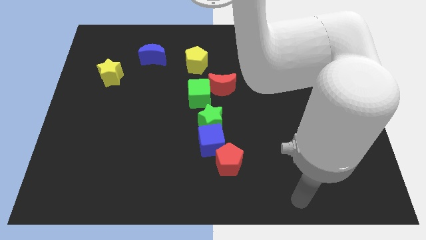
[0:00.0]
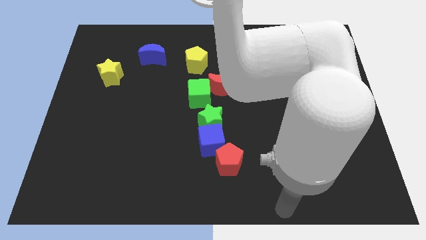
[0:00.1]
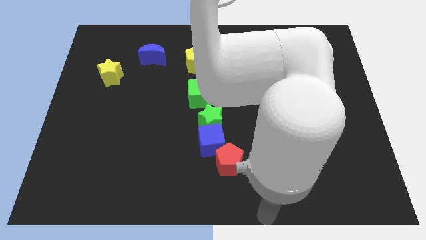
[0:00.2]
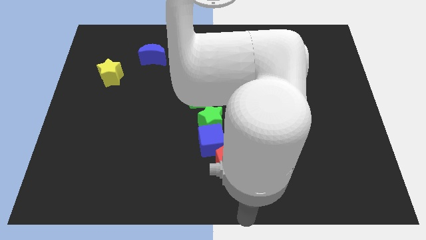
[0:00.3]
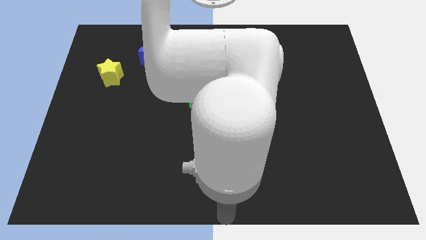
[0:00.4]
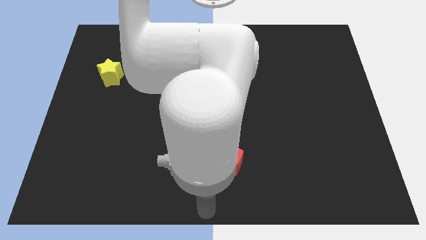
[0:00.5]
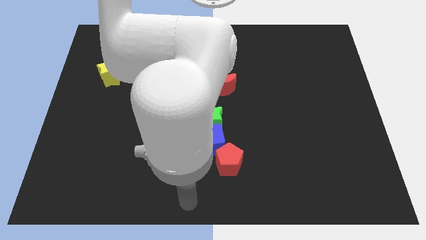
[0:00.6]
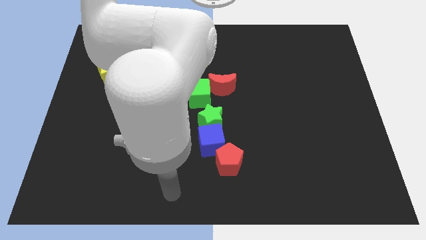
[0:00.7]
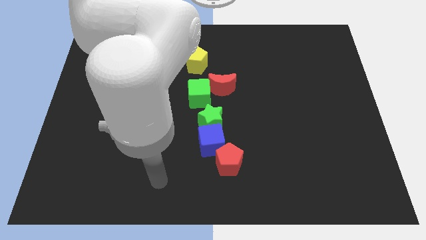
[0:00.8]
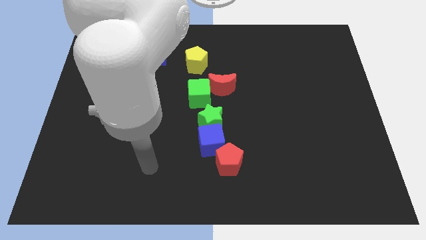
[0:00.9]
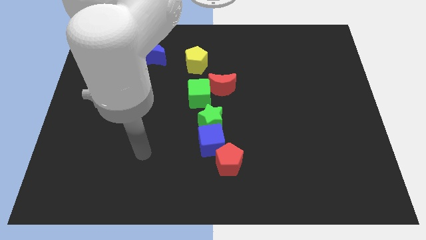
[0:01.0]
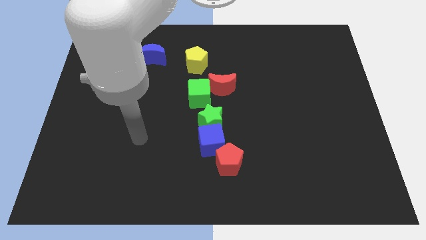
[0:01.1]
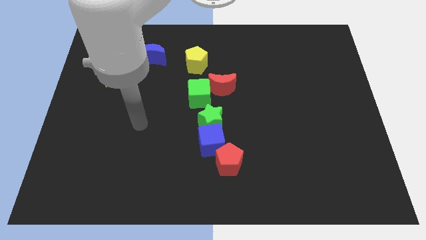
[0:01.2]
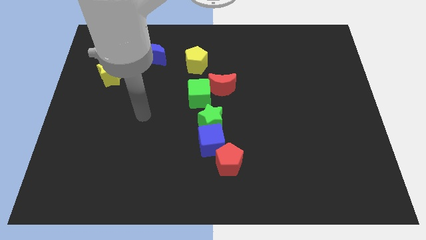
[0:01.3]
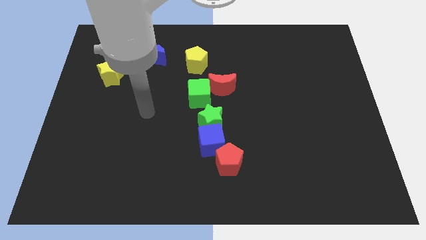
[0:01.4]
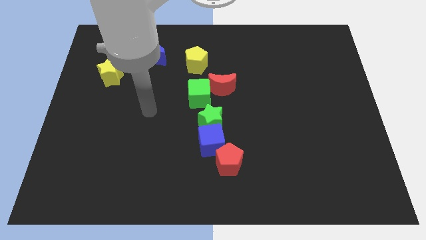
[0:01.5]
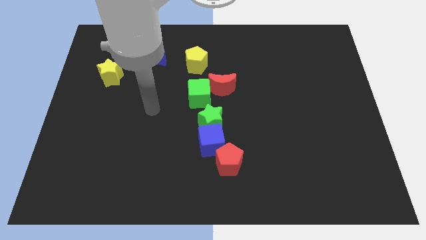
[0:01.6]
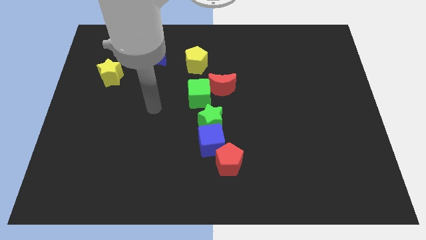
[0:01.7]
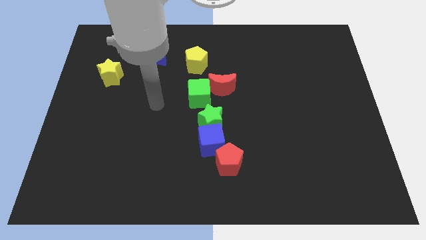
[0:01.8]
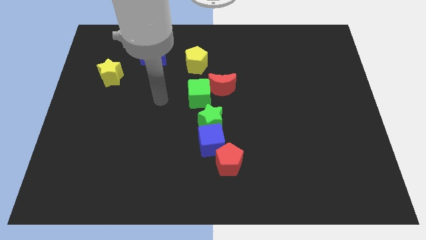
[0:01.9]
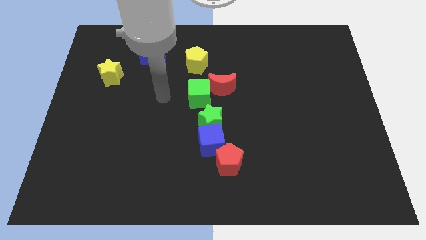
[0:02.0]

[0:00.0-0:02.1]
move arm left beside the green cube

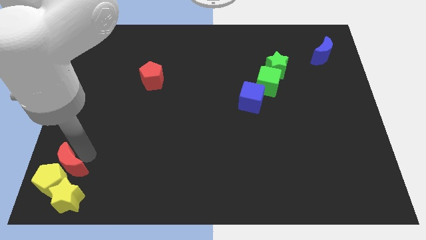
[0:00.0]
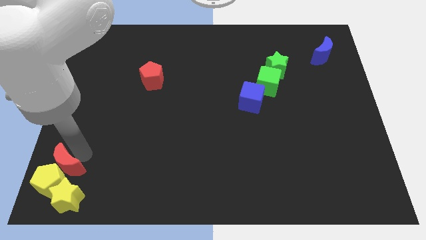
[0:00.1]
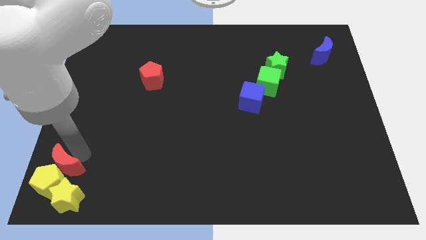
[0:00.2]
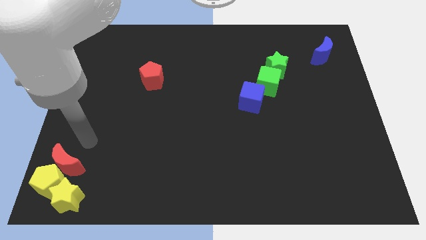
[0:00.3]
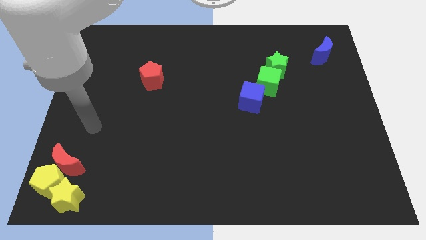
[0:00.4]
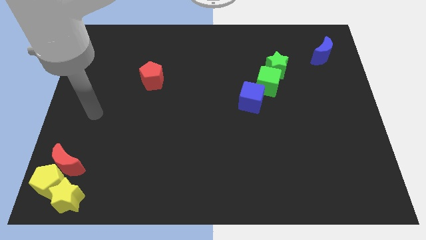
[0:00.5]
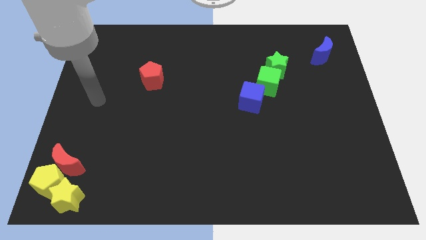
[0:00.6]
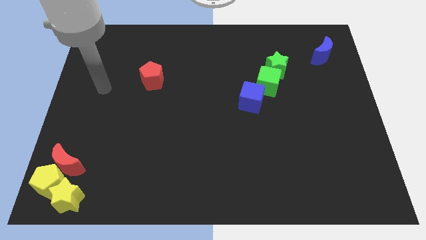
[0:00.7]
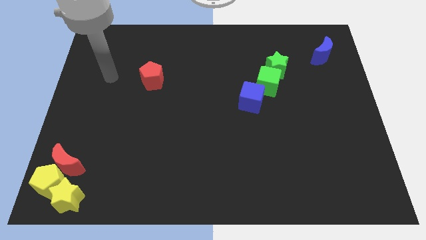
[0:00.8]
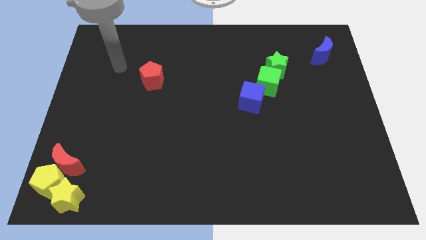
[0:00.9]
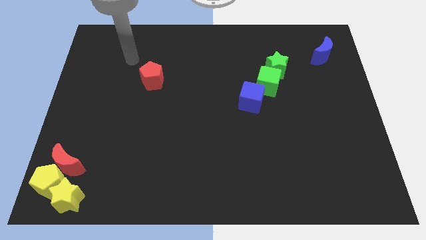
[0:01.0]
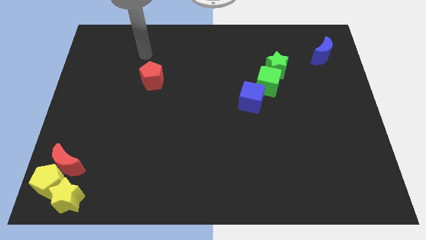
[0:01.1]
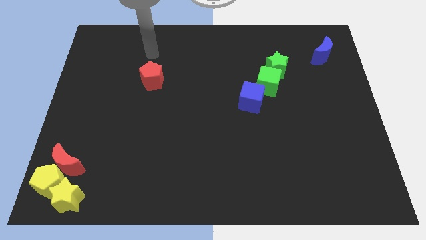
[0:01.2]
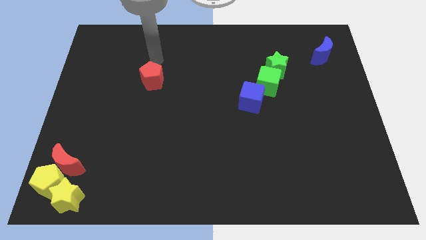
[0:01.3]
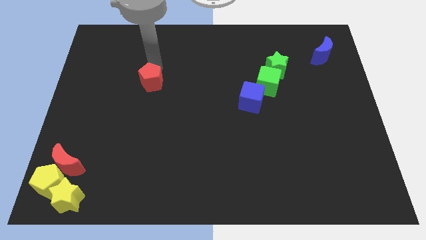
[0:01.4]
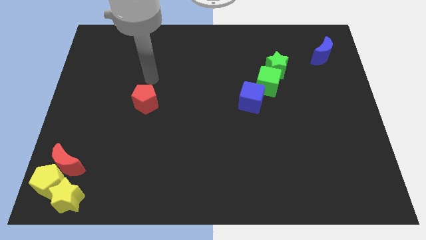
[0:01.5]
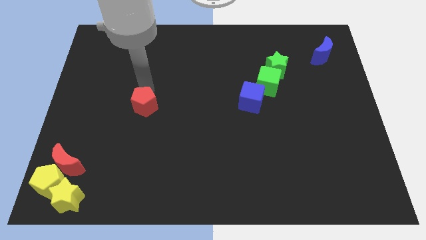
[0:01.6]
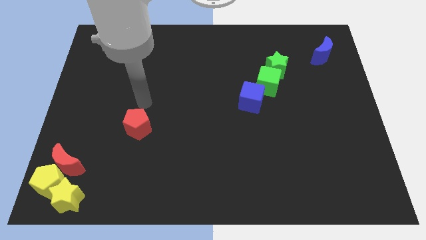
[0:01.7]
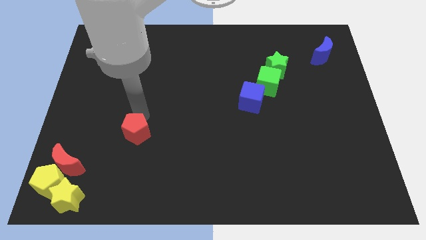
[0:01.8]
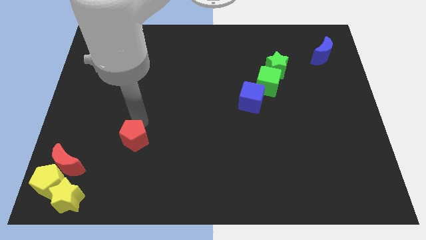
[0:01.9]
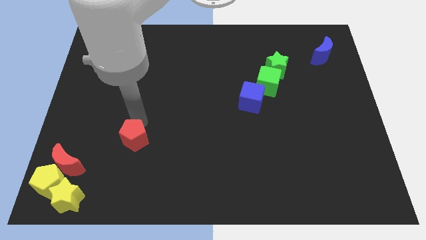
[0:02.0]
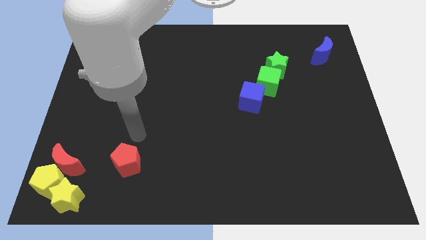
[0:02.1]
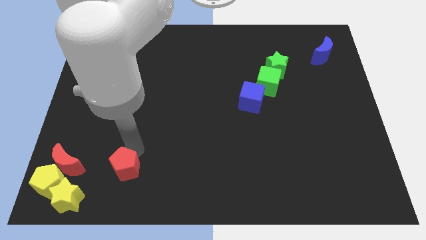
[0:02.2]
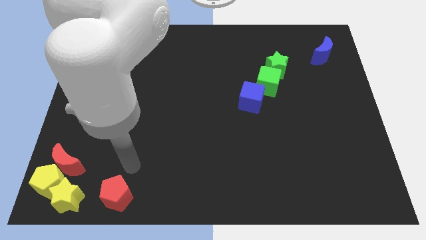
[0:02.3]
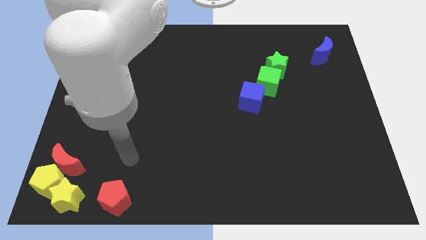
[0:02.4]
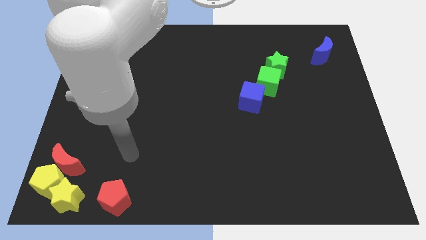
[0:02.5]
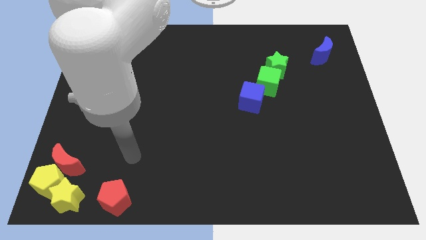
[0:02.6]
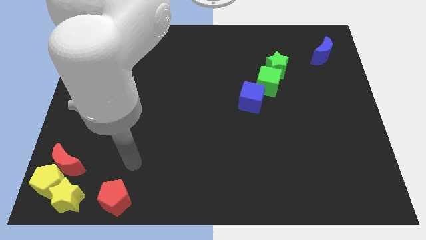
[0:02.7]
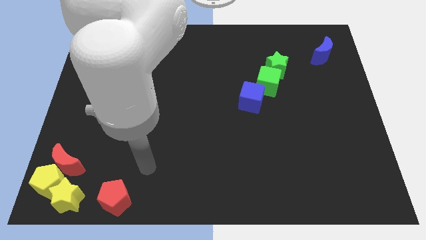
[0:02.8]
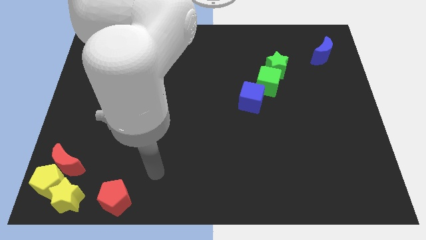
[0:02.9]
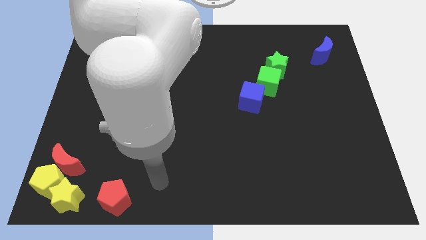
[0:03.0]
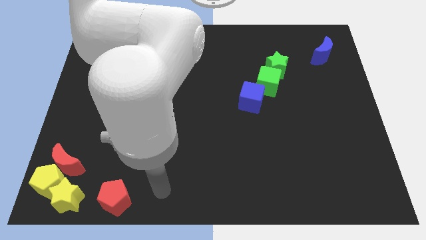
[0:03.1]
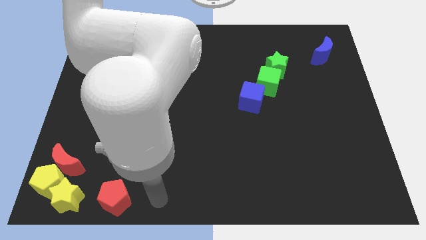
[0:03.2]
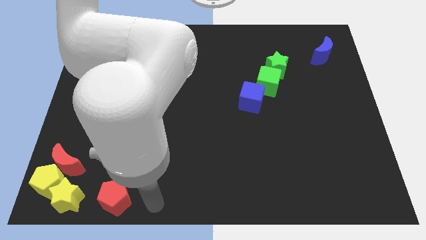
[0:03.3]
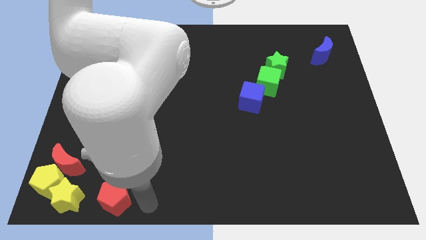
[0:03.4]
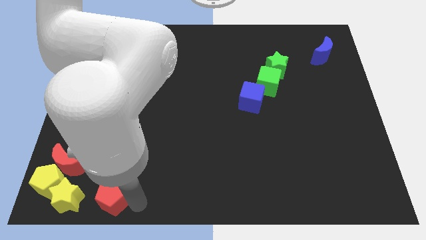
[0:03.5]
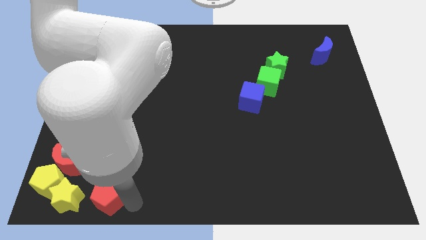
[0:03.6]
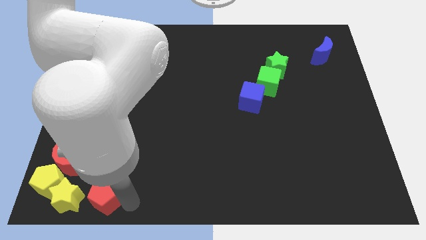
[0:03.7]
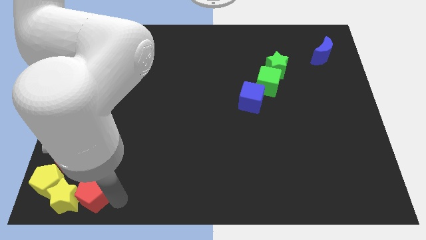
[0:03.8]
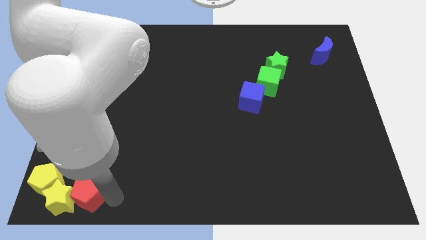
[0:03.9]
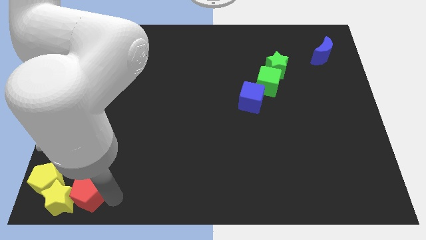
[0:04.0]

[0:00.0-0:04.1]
push the red pentagon to the right side of the yellow star

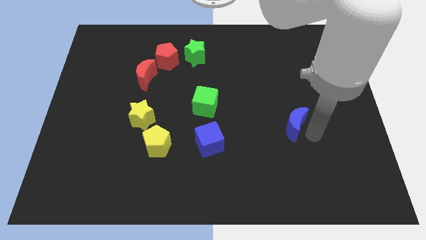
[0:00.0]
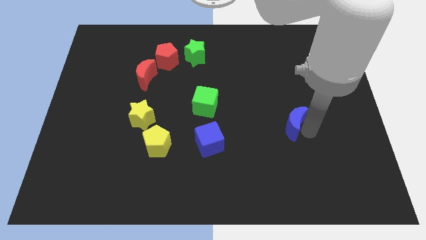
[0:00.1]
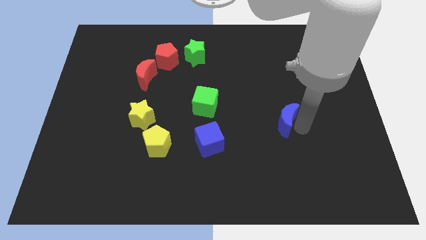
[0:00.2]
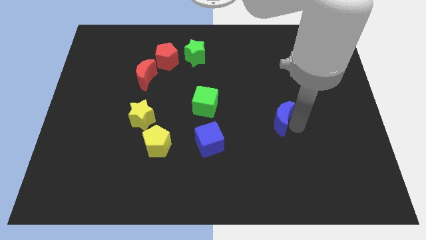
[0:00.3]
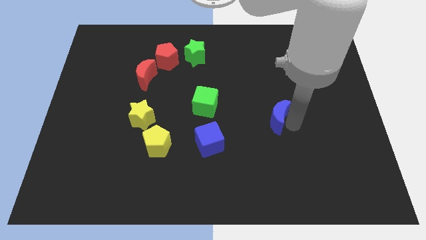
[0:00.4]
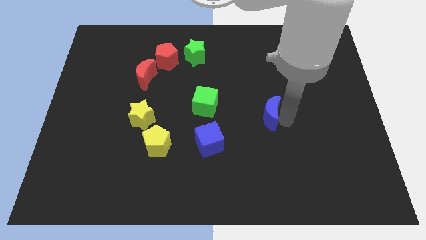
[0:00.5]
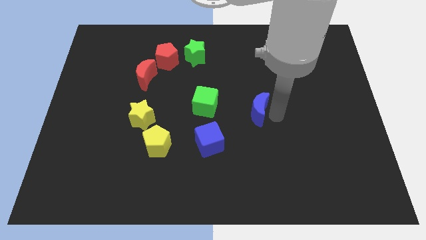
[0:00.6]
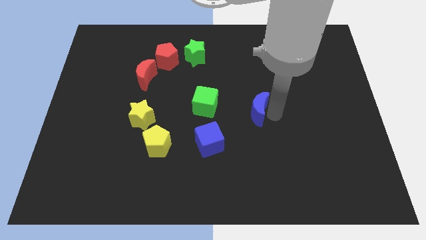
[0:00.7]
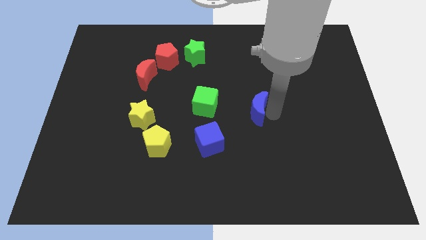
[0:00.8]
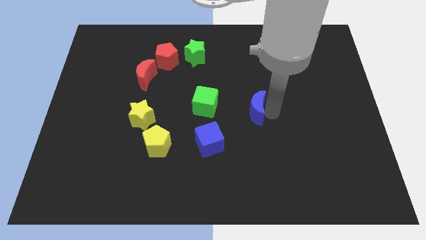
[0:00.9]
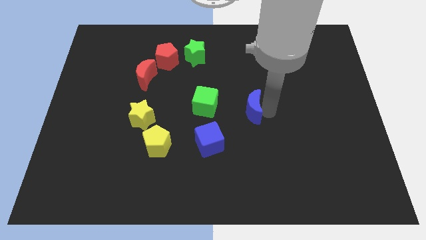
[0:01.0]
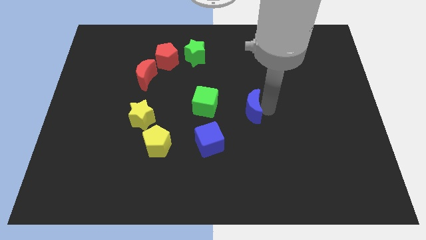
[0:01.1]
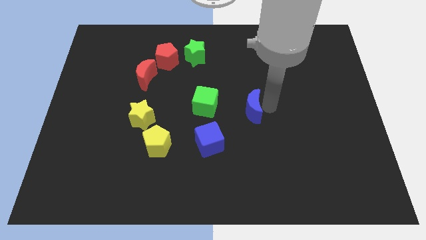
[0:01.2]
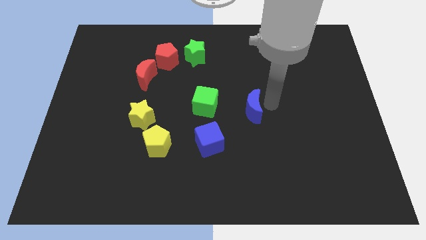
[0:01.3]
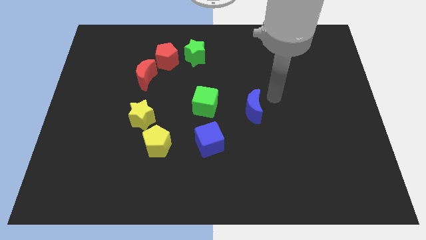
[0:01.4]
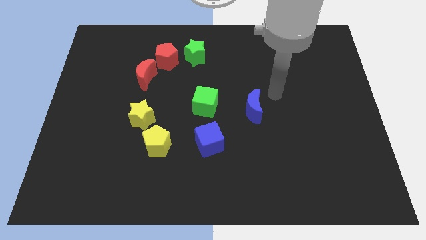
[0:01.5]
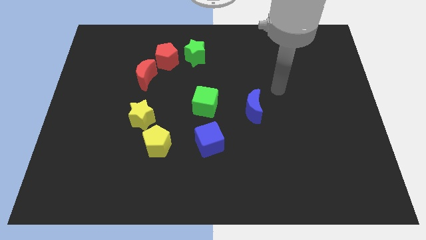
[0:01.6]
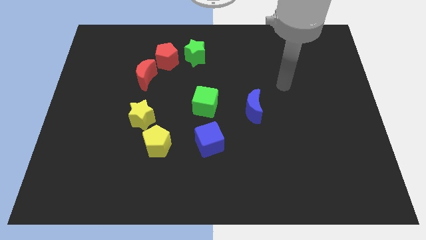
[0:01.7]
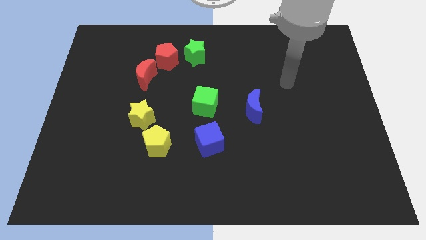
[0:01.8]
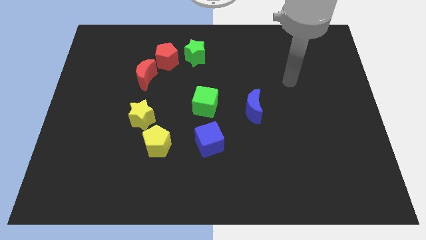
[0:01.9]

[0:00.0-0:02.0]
put the blue moon to the right side of the green cube

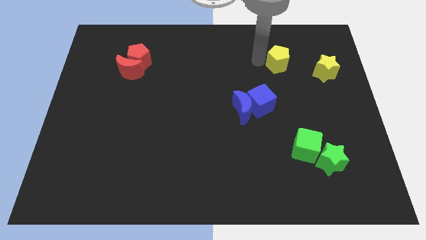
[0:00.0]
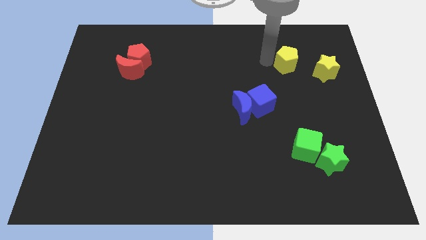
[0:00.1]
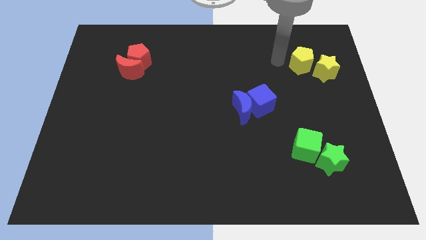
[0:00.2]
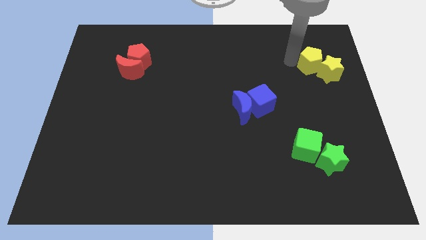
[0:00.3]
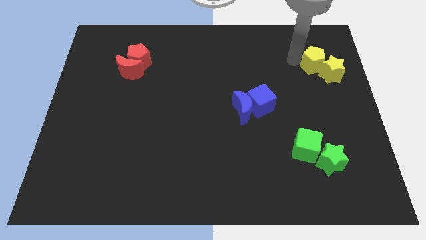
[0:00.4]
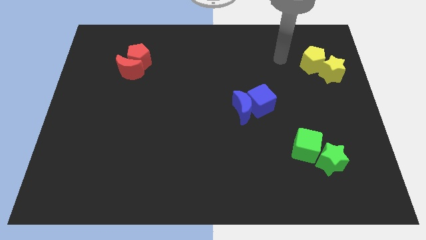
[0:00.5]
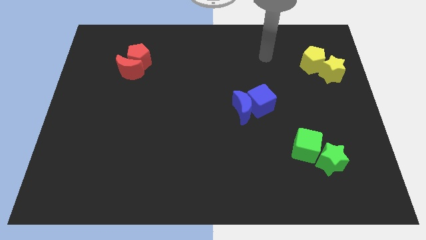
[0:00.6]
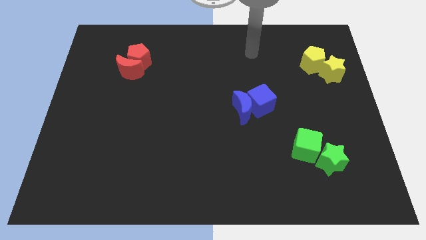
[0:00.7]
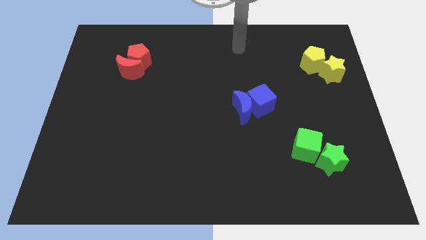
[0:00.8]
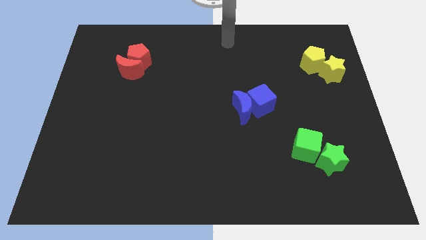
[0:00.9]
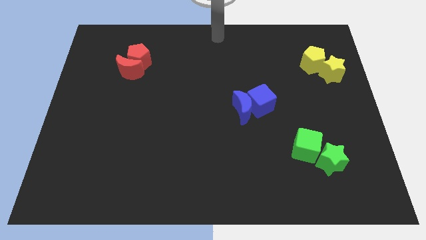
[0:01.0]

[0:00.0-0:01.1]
move the arm away from yellow blocks
